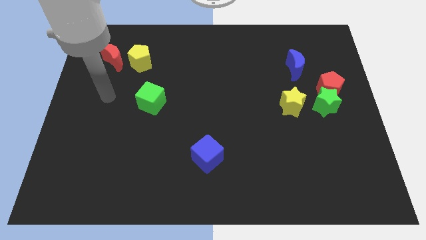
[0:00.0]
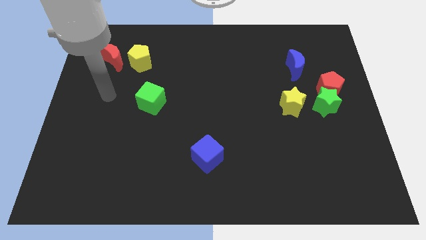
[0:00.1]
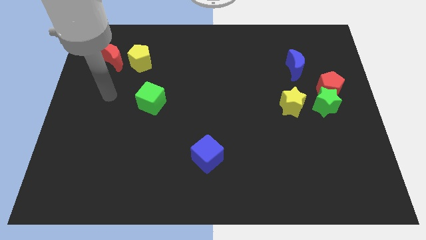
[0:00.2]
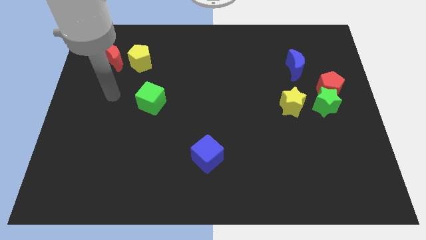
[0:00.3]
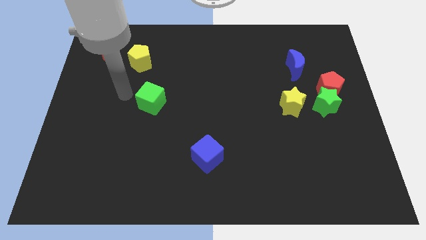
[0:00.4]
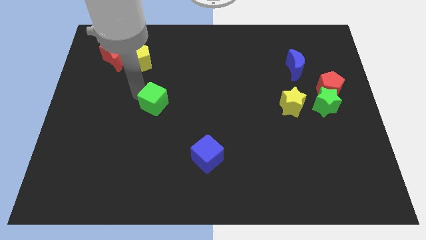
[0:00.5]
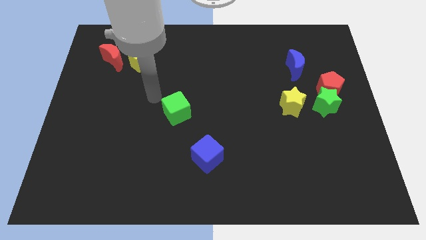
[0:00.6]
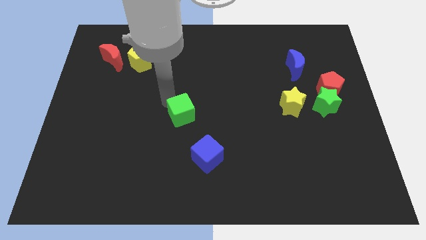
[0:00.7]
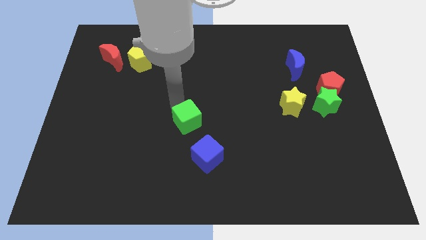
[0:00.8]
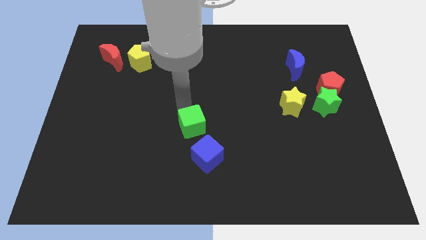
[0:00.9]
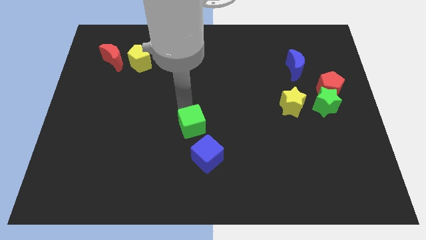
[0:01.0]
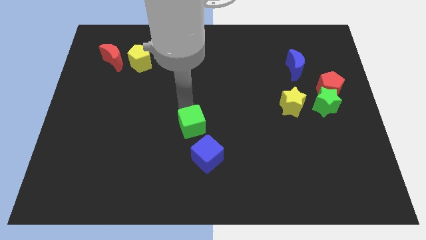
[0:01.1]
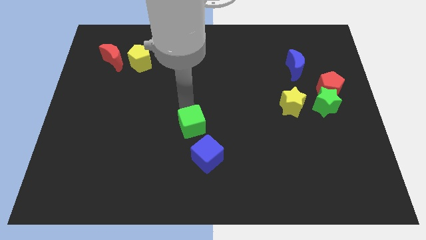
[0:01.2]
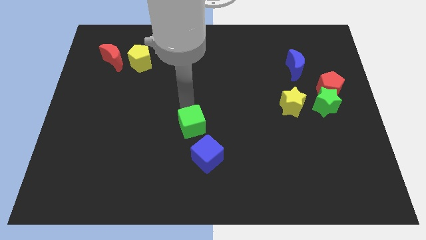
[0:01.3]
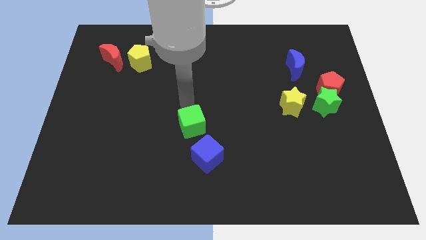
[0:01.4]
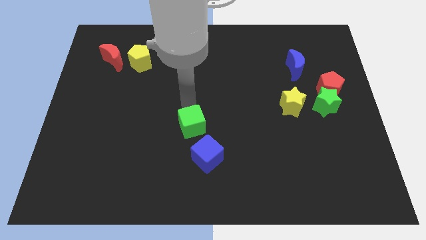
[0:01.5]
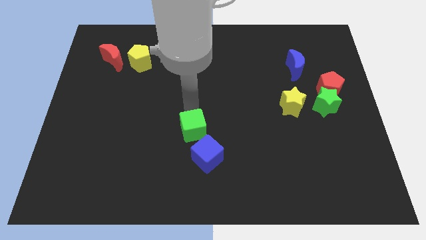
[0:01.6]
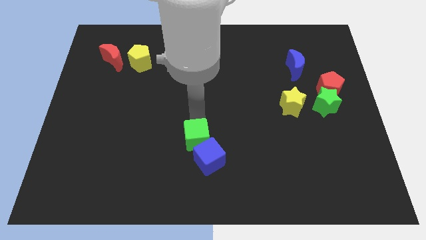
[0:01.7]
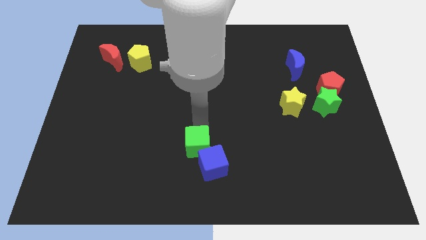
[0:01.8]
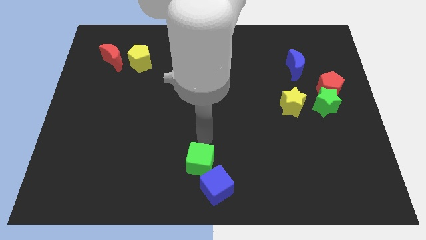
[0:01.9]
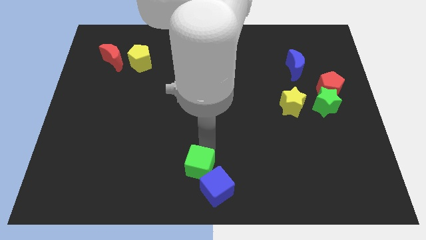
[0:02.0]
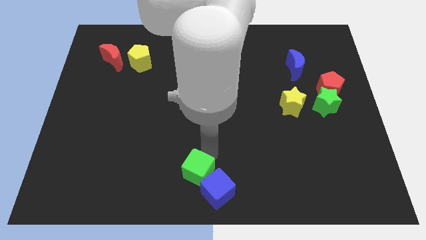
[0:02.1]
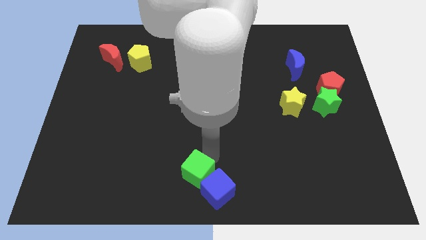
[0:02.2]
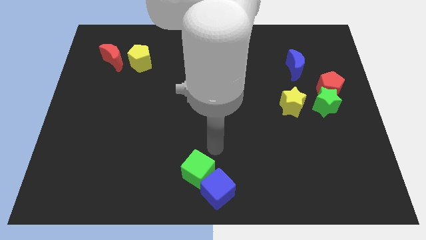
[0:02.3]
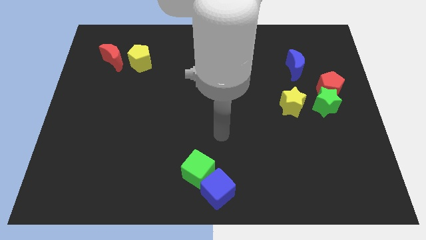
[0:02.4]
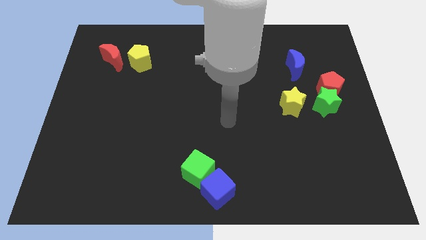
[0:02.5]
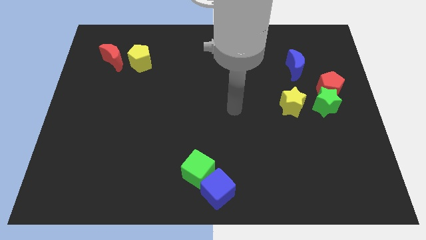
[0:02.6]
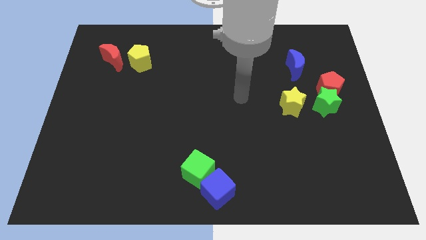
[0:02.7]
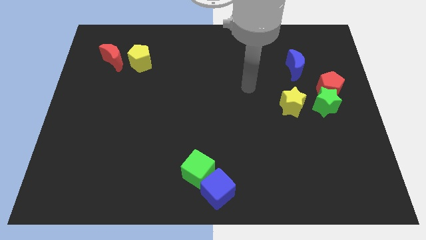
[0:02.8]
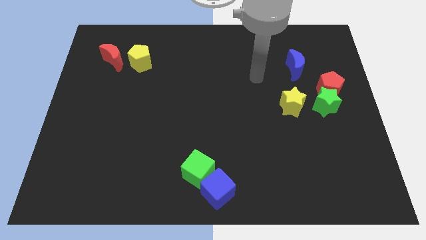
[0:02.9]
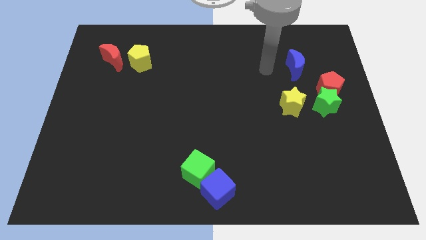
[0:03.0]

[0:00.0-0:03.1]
move the green cube above to the blue cube

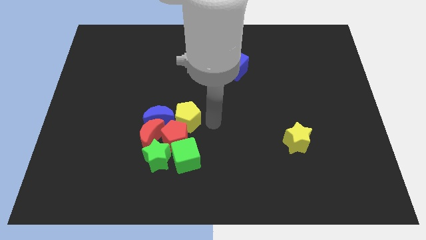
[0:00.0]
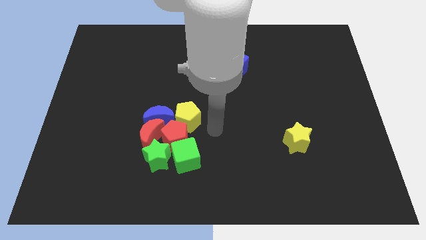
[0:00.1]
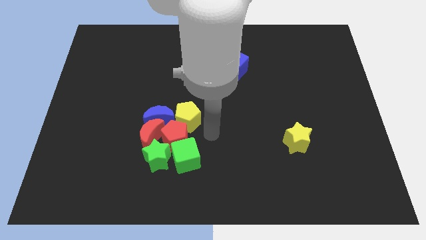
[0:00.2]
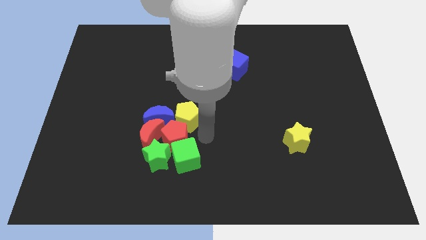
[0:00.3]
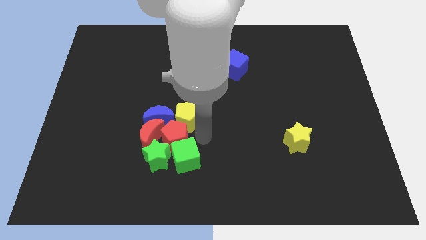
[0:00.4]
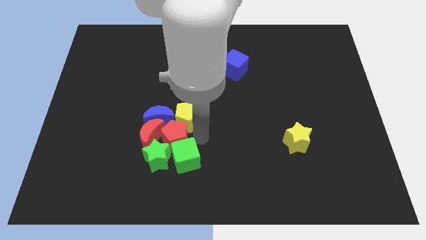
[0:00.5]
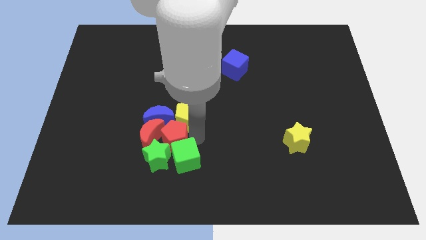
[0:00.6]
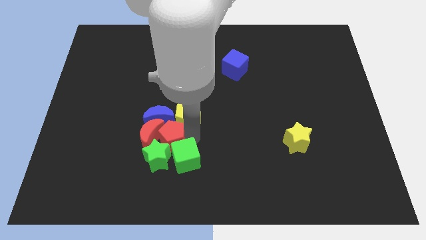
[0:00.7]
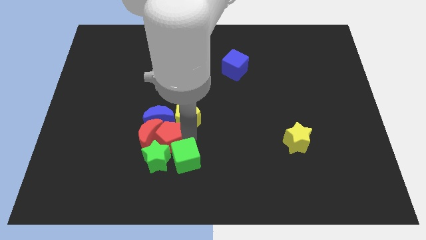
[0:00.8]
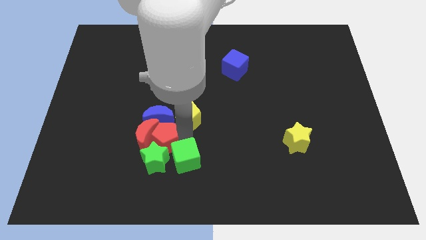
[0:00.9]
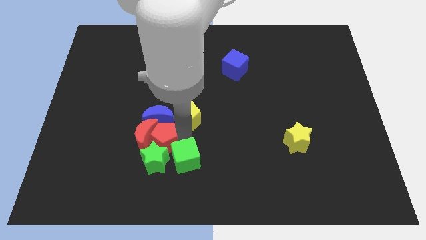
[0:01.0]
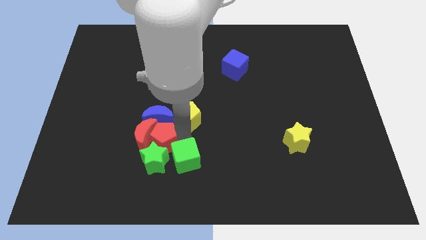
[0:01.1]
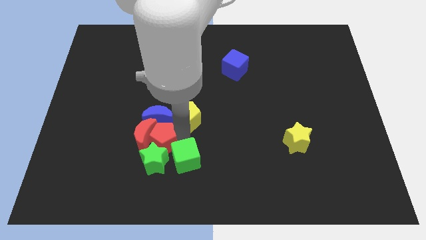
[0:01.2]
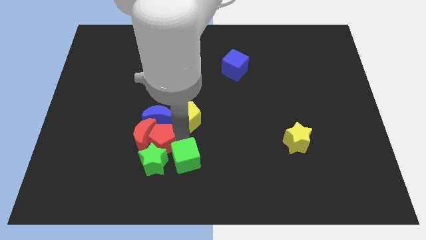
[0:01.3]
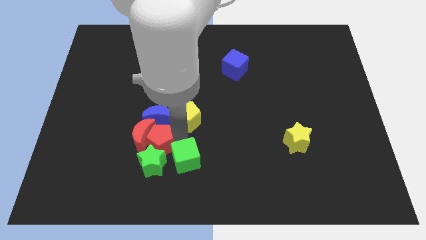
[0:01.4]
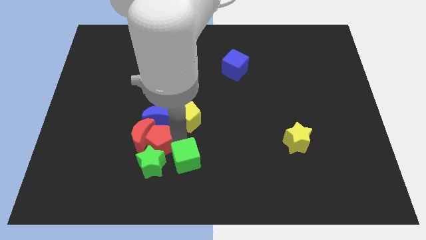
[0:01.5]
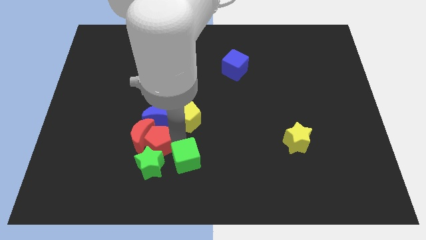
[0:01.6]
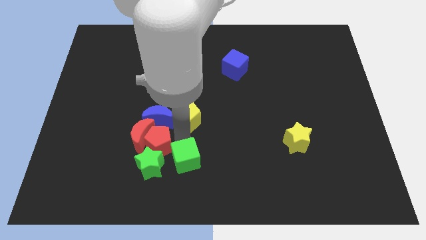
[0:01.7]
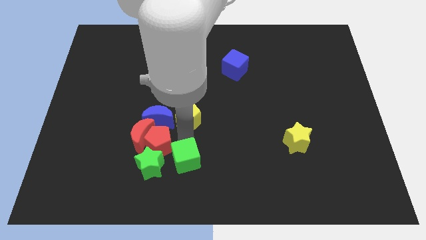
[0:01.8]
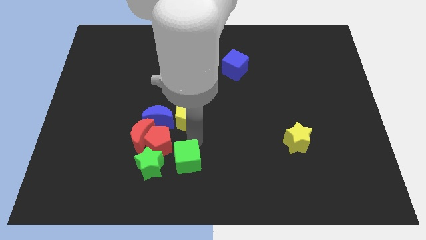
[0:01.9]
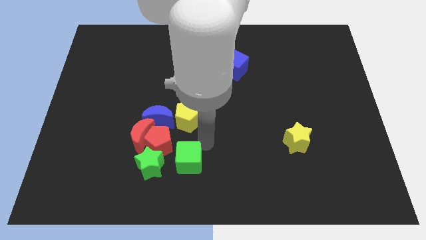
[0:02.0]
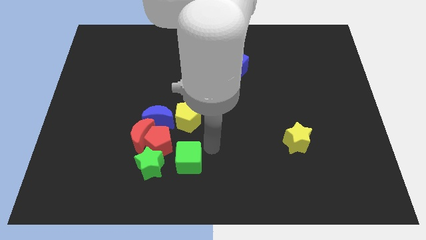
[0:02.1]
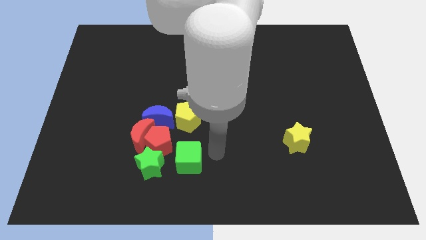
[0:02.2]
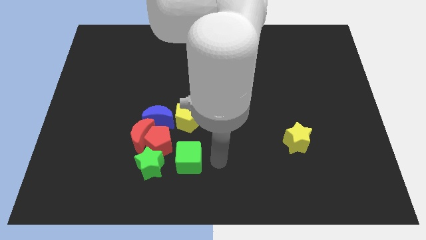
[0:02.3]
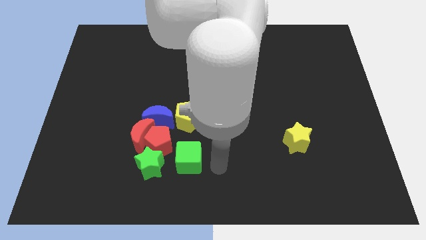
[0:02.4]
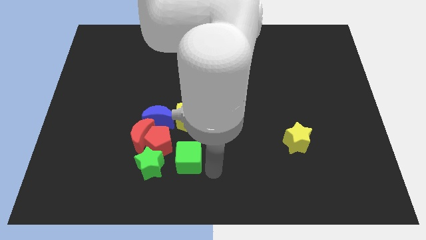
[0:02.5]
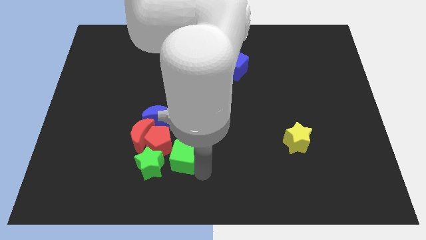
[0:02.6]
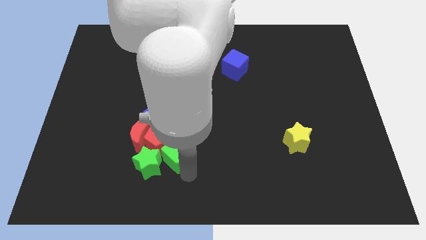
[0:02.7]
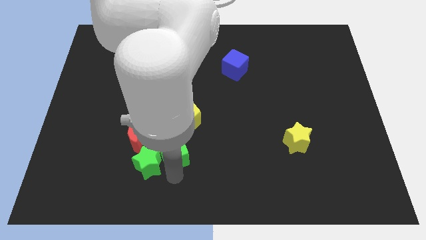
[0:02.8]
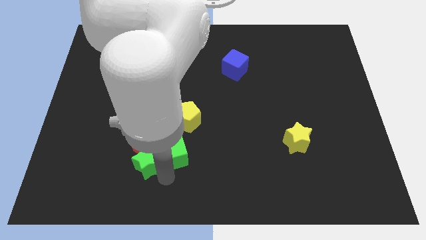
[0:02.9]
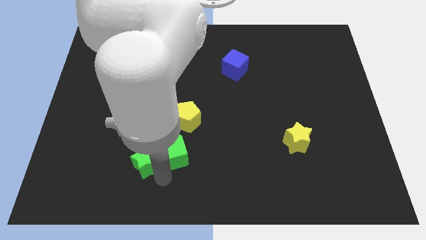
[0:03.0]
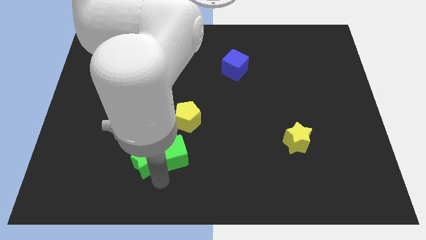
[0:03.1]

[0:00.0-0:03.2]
push the red pentagon into the red crescent

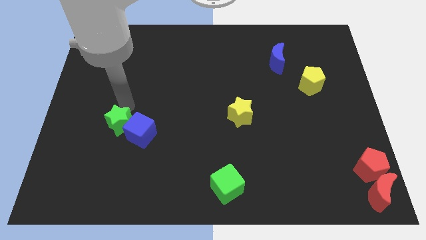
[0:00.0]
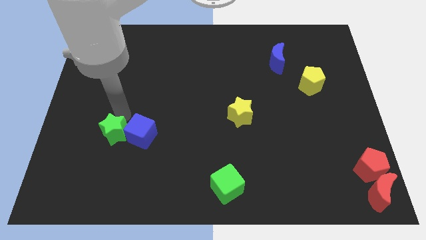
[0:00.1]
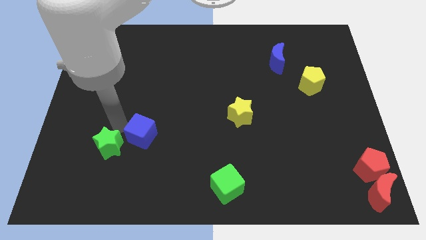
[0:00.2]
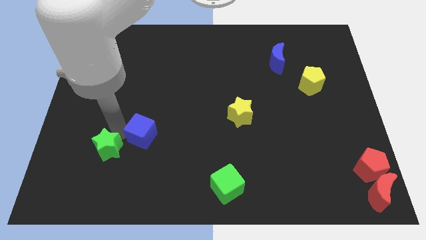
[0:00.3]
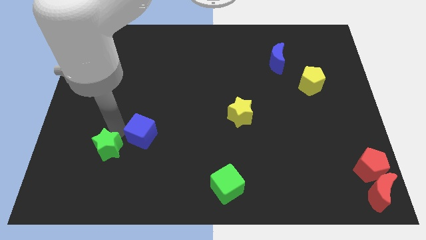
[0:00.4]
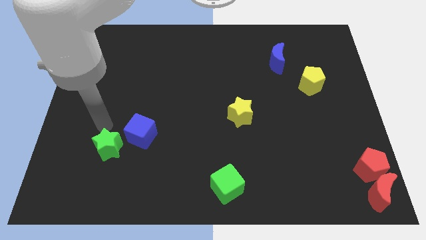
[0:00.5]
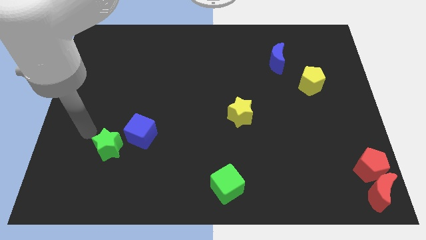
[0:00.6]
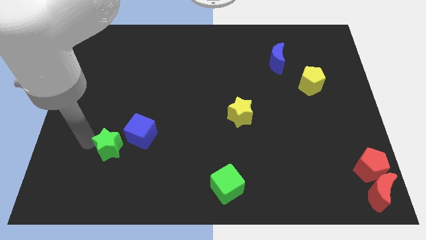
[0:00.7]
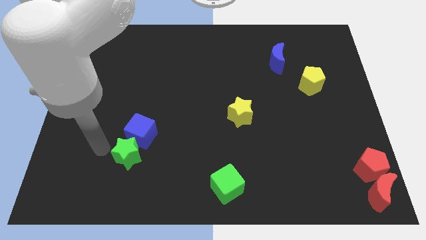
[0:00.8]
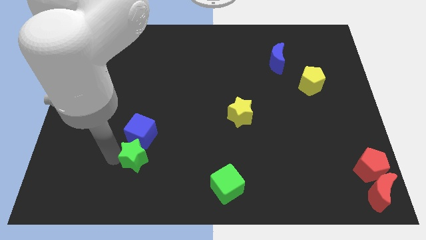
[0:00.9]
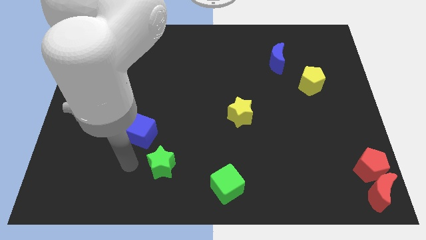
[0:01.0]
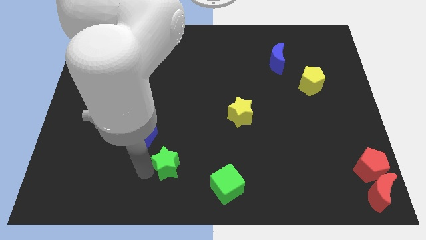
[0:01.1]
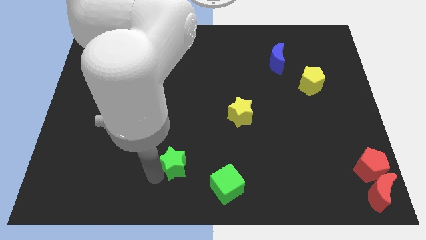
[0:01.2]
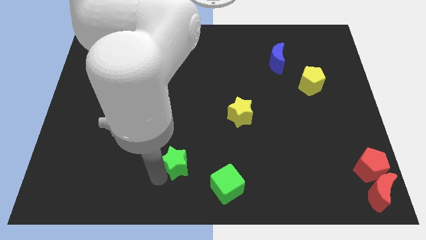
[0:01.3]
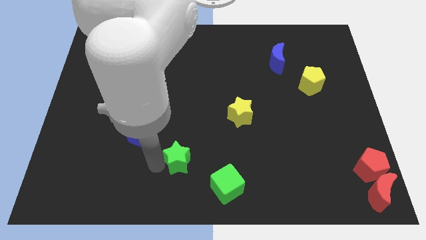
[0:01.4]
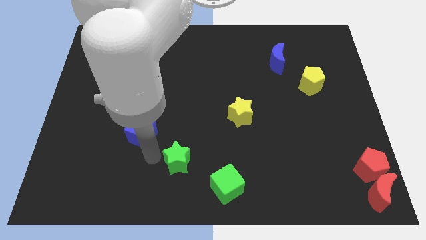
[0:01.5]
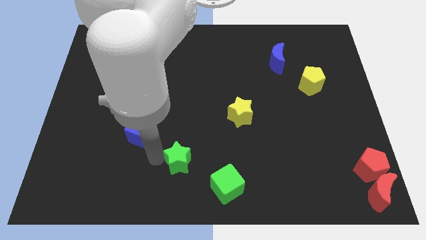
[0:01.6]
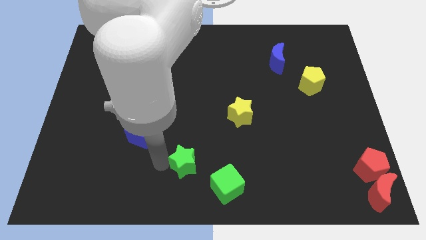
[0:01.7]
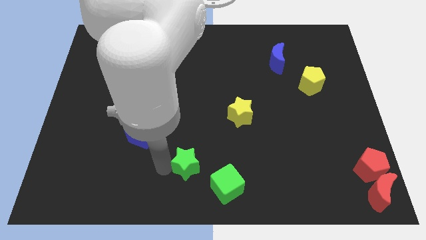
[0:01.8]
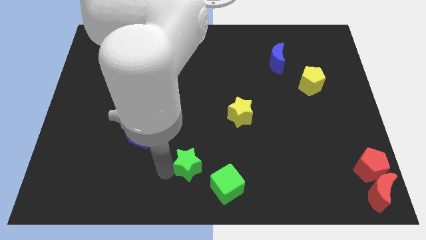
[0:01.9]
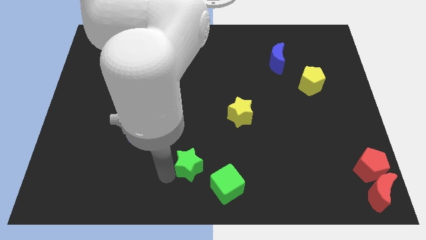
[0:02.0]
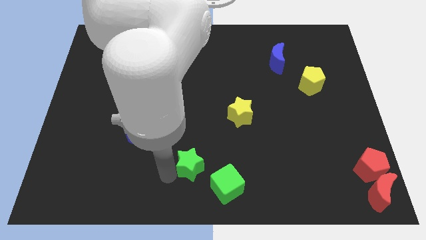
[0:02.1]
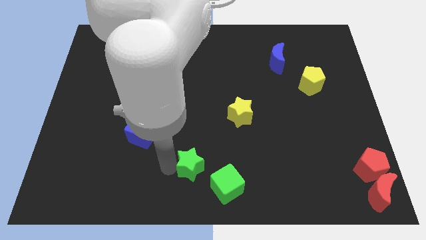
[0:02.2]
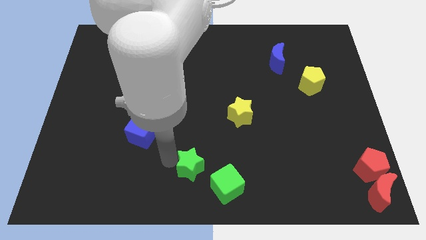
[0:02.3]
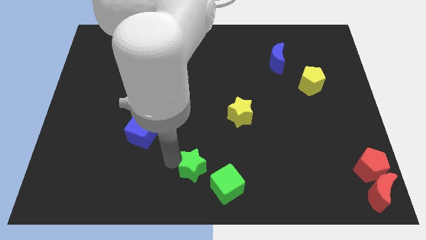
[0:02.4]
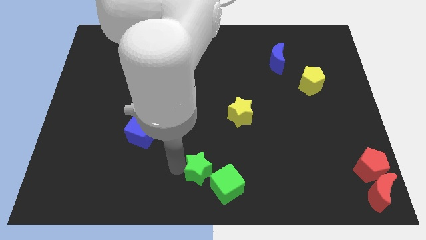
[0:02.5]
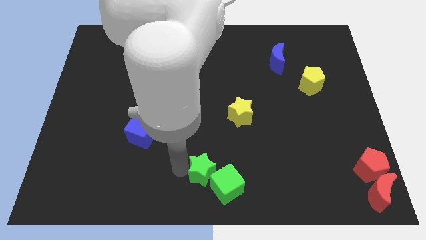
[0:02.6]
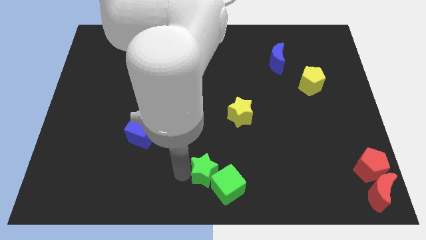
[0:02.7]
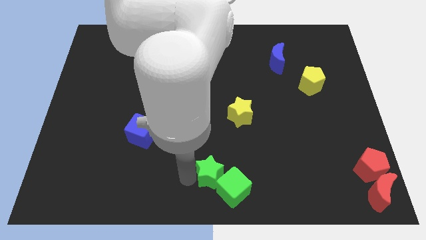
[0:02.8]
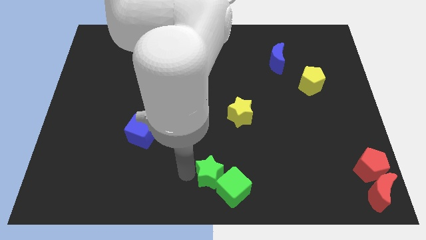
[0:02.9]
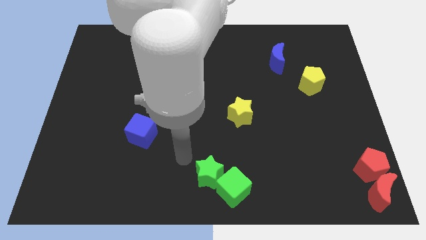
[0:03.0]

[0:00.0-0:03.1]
push green star near to green cube
